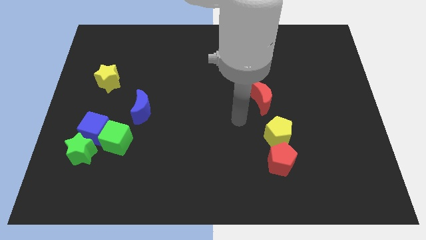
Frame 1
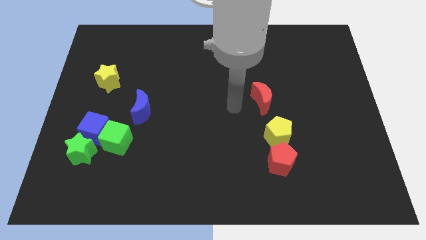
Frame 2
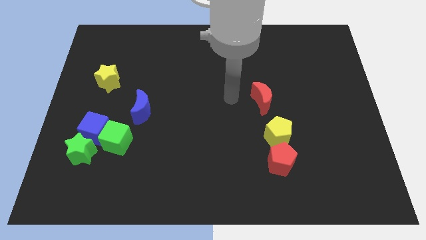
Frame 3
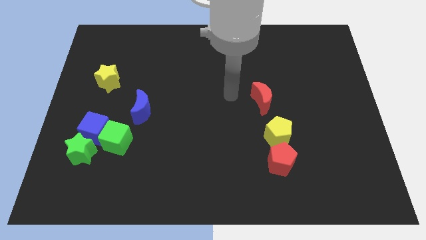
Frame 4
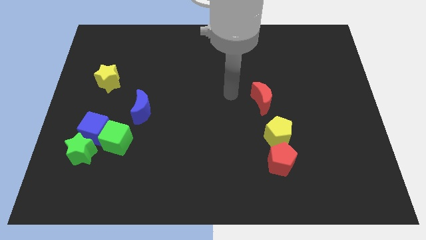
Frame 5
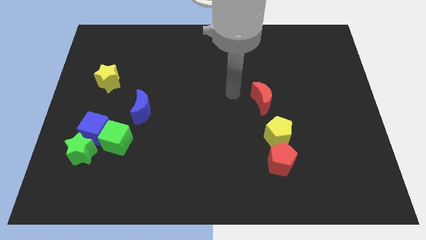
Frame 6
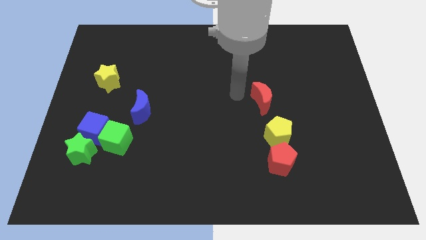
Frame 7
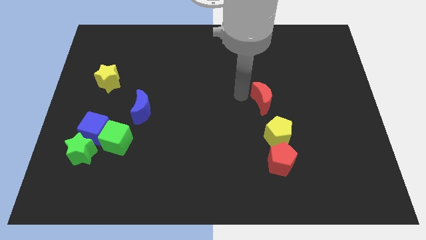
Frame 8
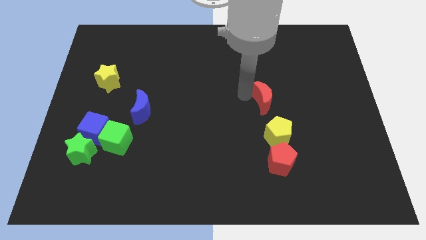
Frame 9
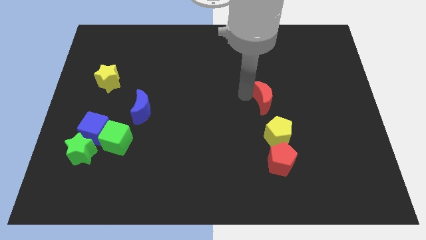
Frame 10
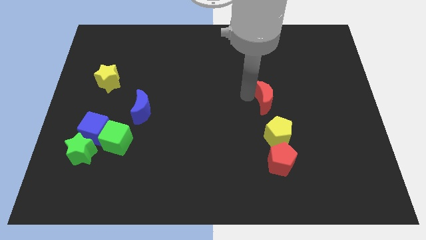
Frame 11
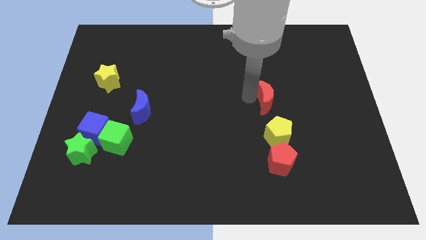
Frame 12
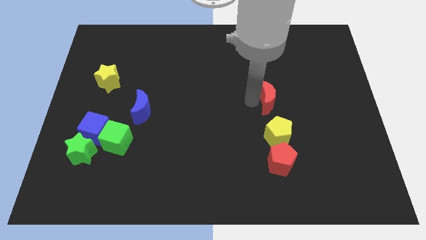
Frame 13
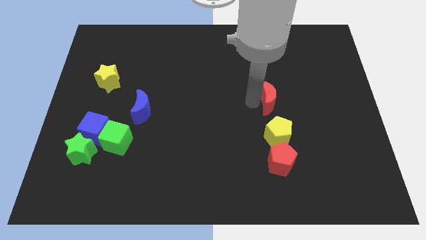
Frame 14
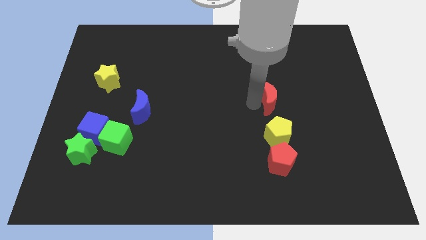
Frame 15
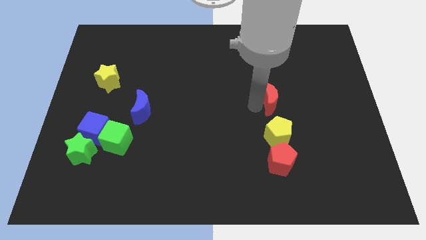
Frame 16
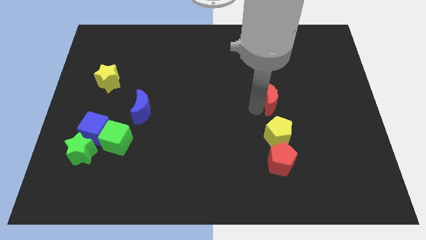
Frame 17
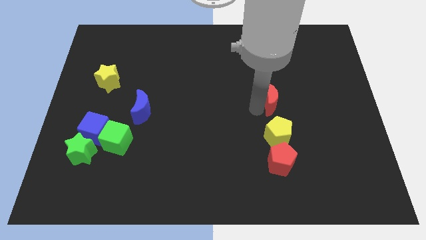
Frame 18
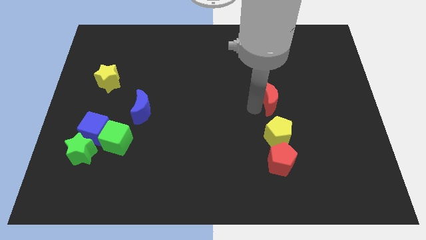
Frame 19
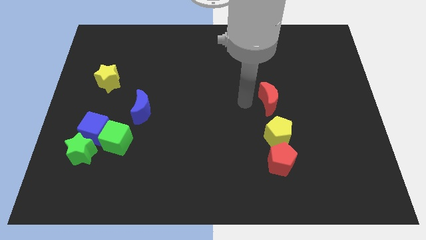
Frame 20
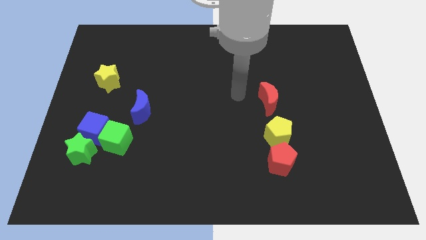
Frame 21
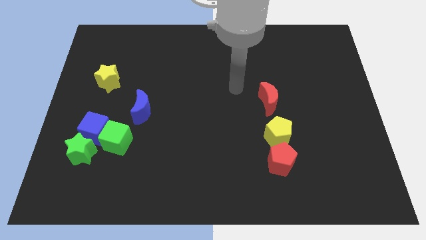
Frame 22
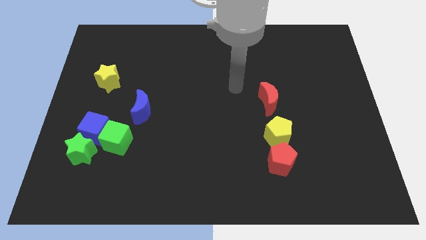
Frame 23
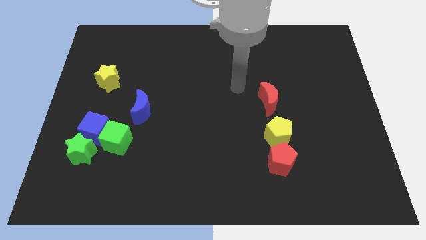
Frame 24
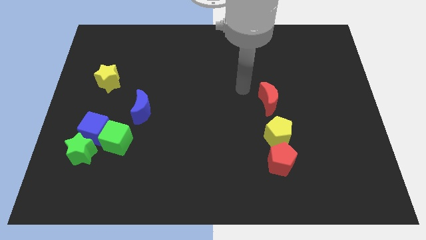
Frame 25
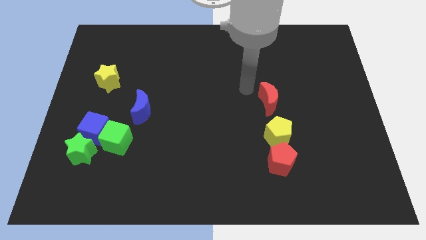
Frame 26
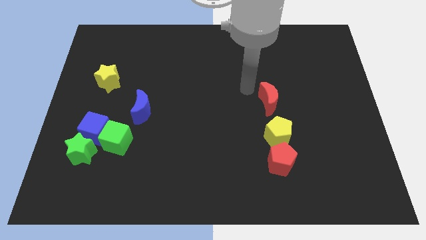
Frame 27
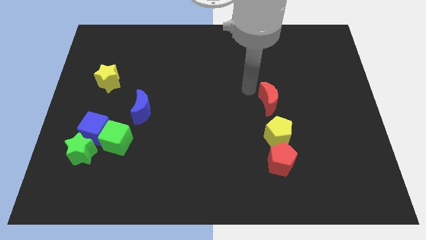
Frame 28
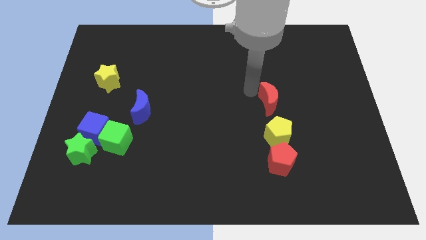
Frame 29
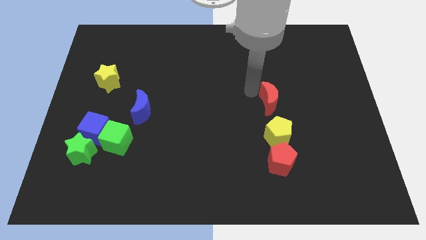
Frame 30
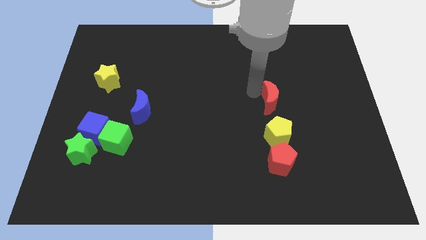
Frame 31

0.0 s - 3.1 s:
slightly push the red moon to the right side

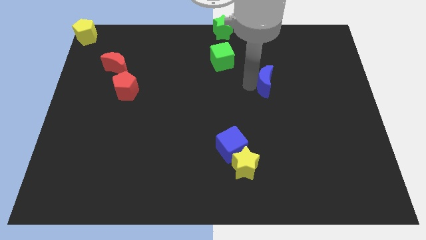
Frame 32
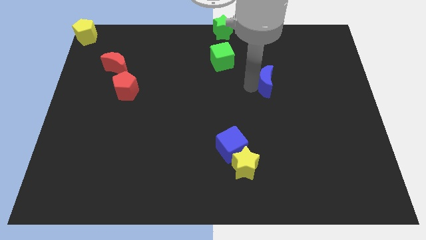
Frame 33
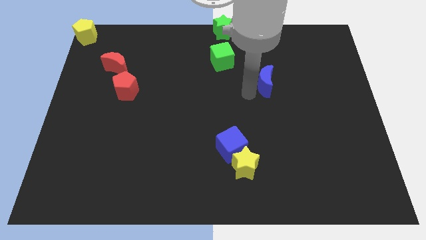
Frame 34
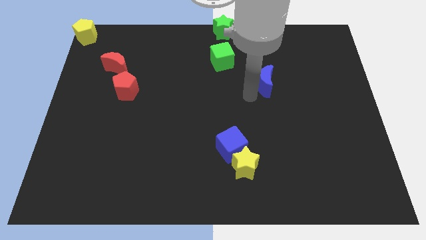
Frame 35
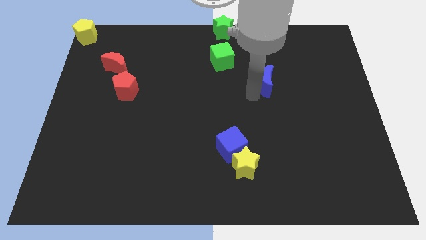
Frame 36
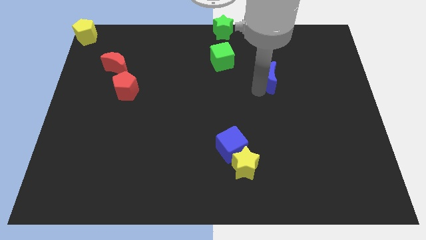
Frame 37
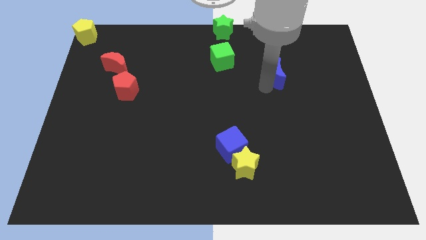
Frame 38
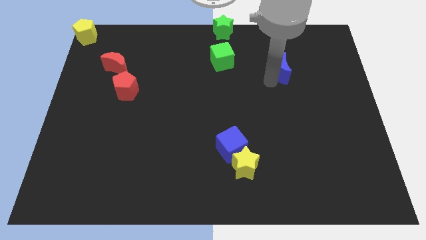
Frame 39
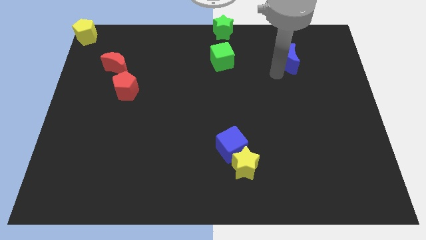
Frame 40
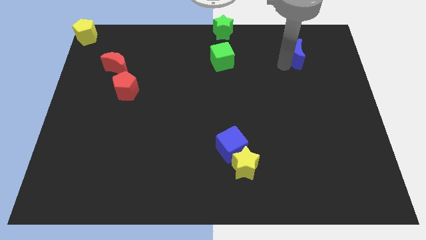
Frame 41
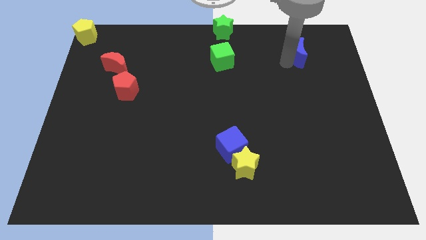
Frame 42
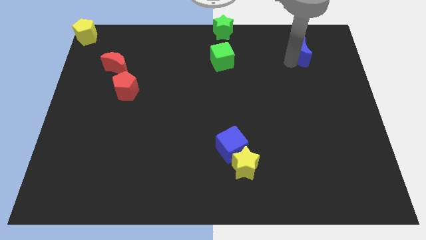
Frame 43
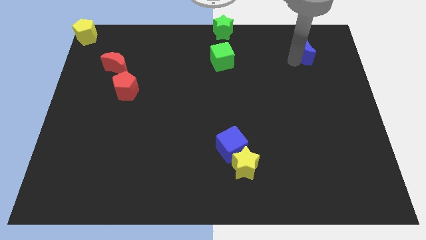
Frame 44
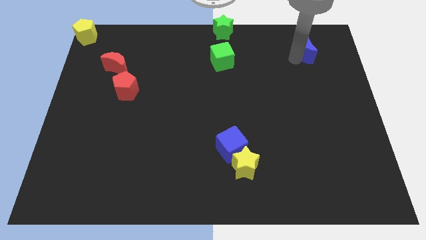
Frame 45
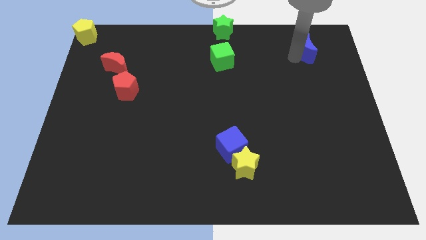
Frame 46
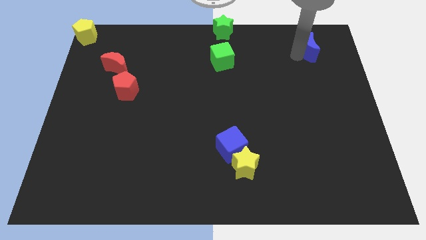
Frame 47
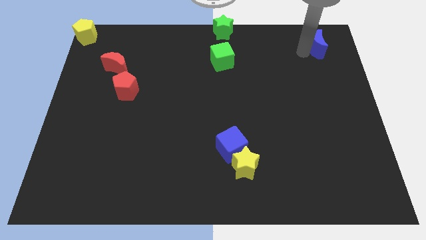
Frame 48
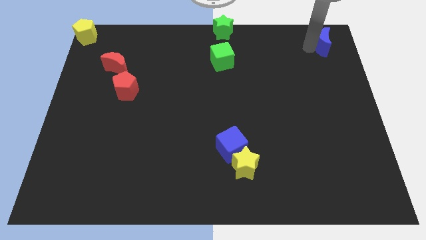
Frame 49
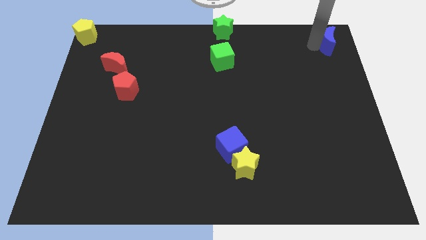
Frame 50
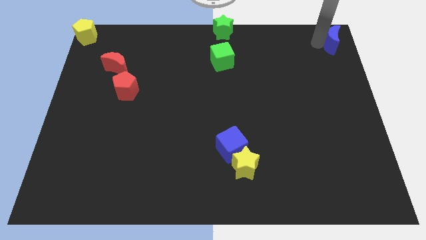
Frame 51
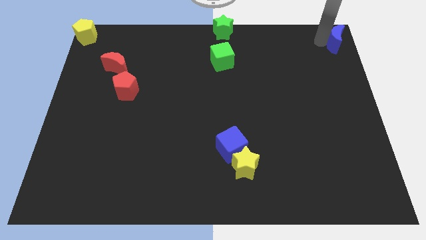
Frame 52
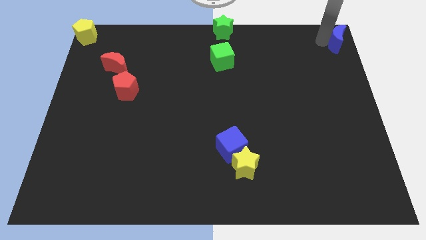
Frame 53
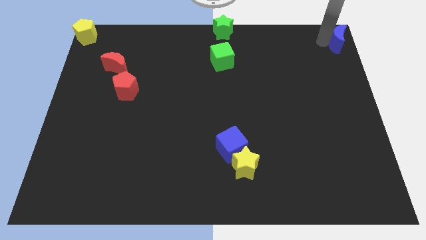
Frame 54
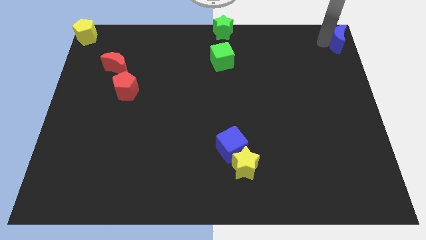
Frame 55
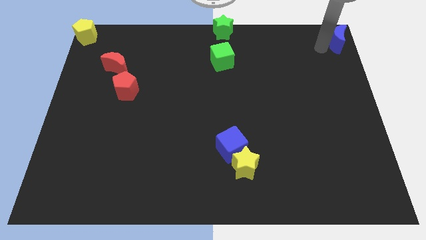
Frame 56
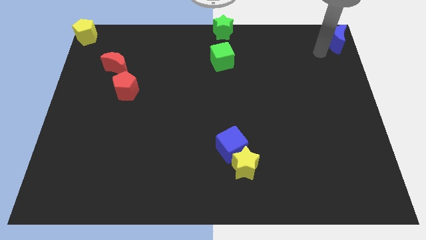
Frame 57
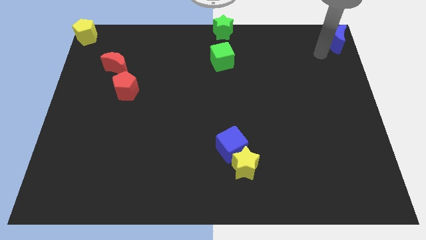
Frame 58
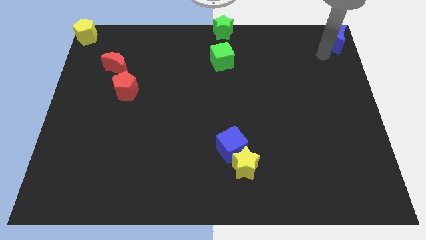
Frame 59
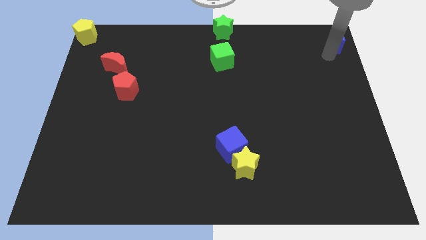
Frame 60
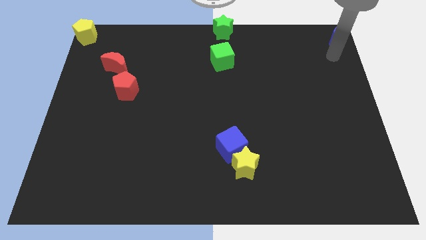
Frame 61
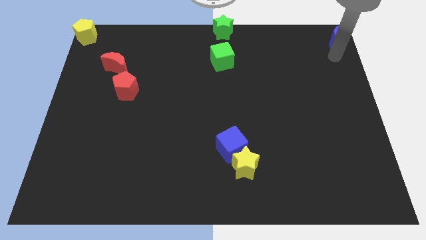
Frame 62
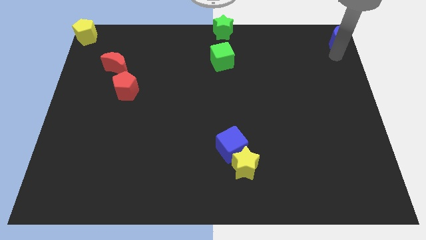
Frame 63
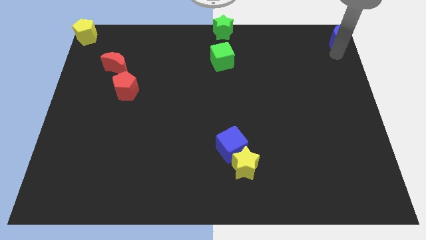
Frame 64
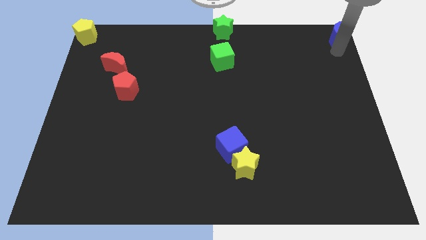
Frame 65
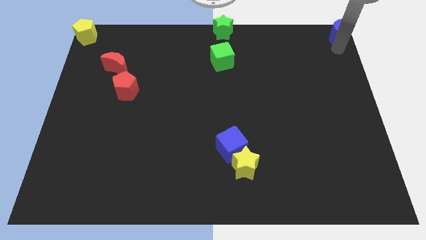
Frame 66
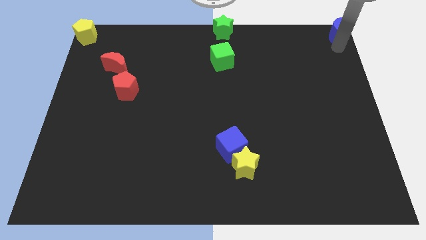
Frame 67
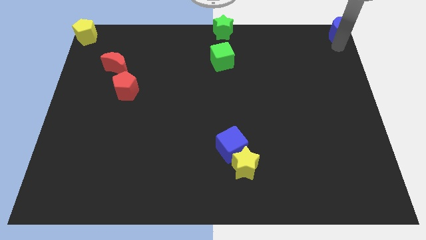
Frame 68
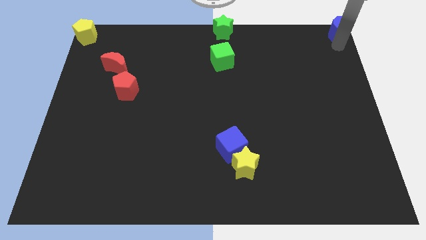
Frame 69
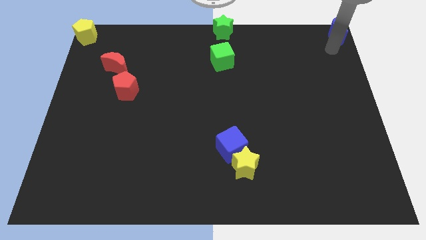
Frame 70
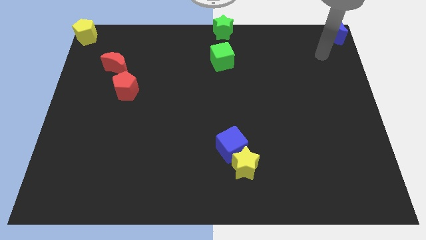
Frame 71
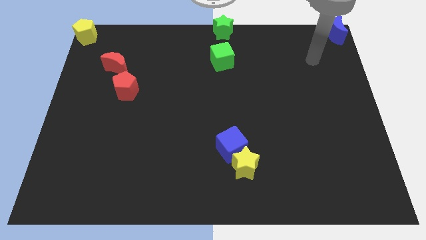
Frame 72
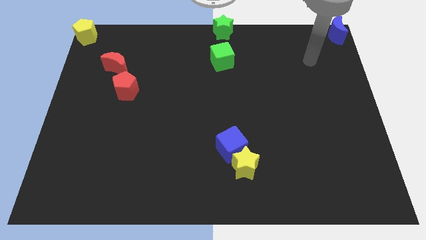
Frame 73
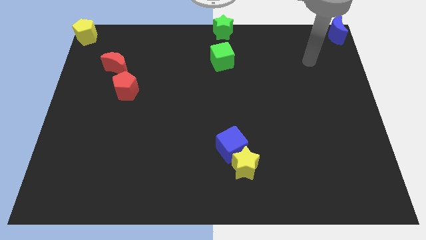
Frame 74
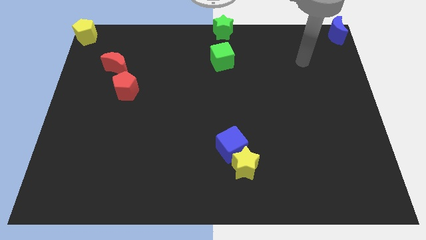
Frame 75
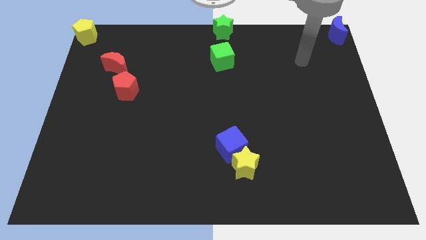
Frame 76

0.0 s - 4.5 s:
place blue moon to the top right corner of the board

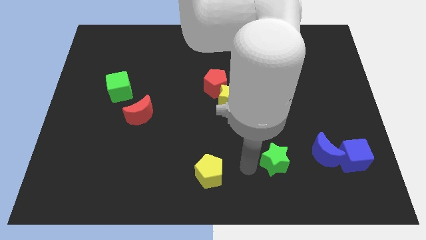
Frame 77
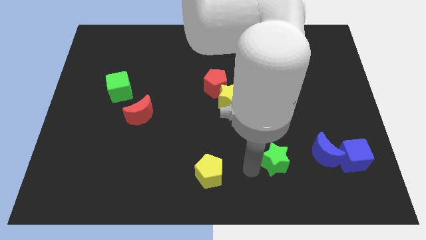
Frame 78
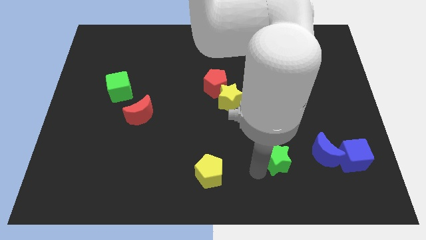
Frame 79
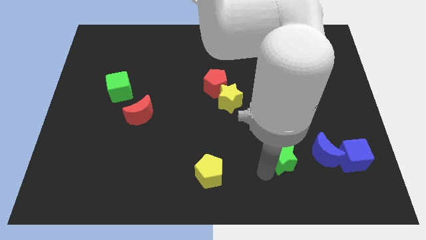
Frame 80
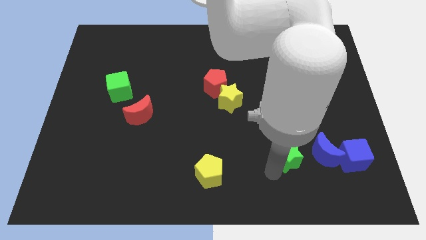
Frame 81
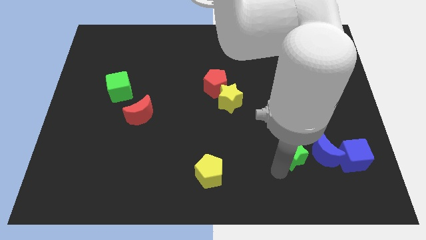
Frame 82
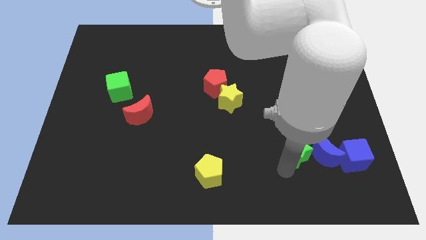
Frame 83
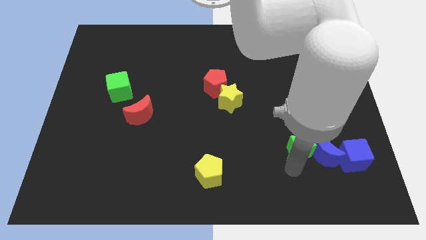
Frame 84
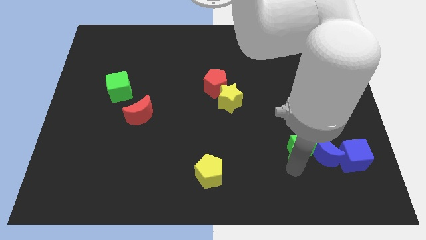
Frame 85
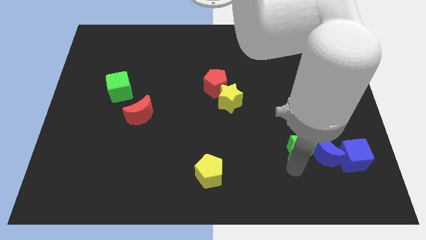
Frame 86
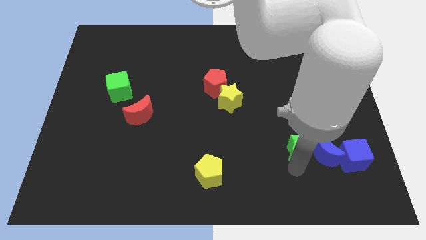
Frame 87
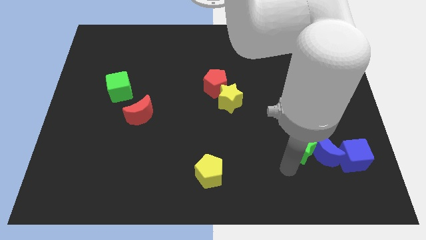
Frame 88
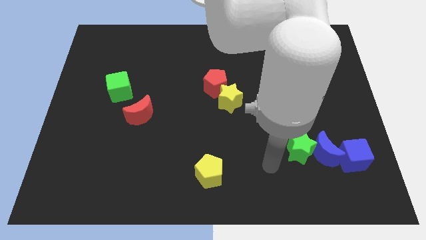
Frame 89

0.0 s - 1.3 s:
push the green star in to the blue moon

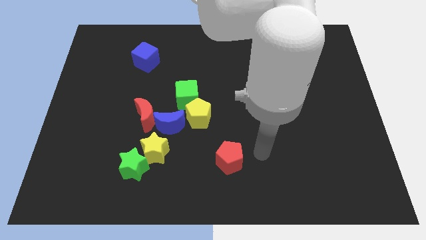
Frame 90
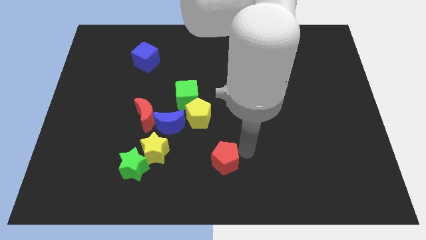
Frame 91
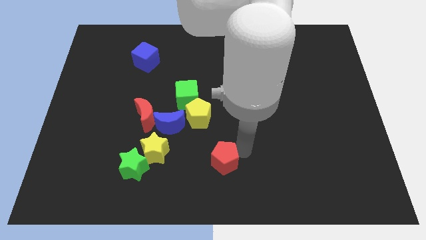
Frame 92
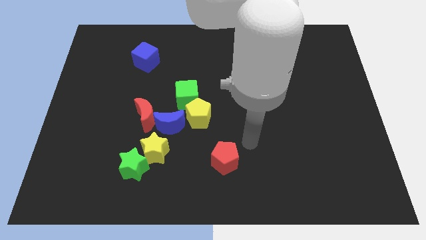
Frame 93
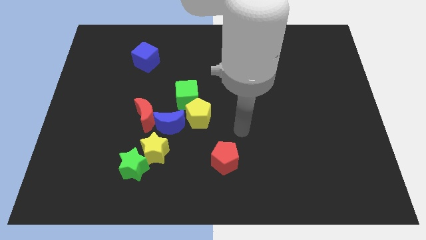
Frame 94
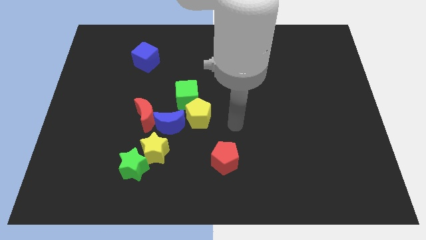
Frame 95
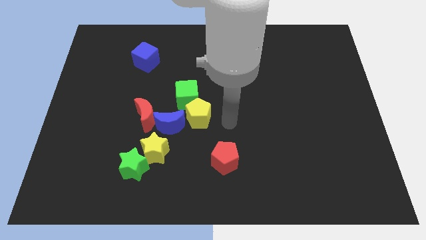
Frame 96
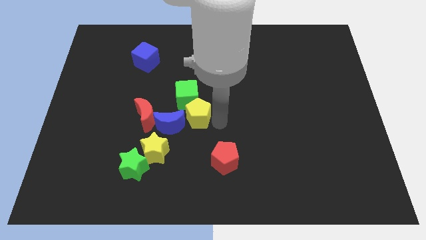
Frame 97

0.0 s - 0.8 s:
move the red pentagon to the right side of the yellow star
